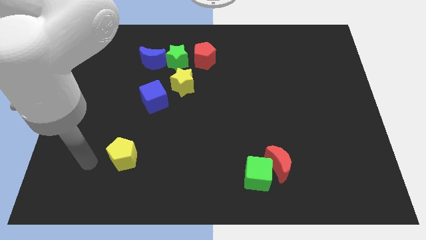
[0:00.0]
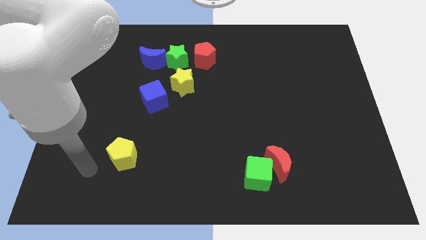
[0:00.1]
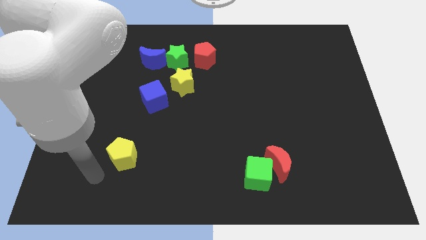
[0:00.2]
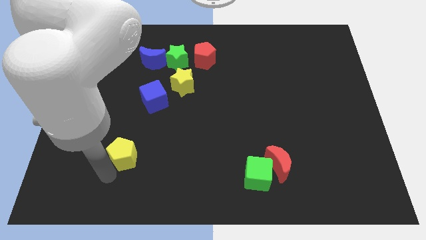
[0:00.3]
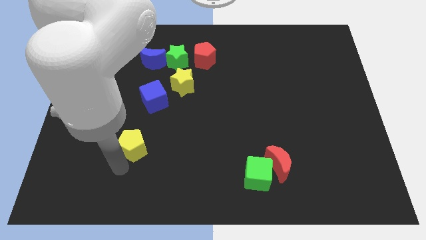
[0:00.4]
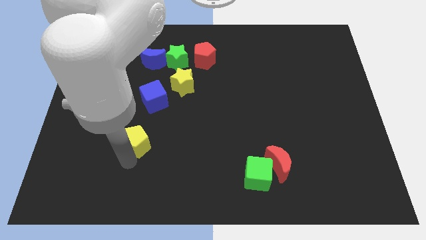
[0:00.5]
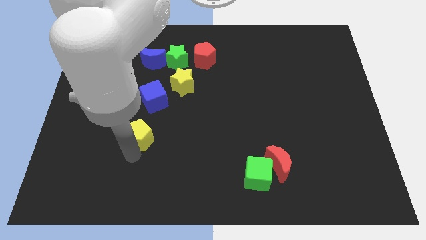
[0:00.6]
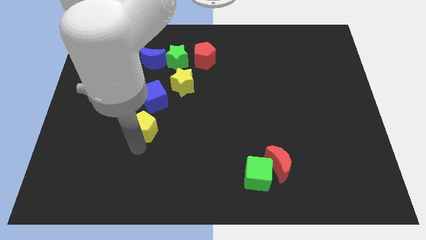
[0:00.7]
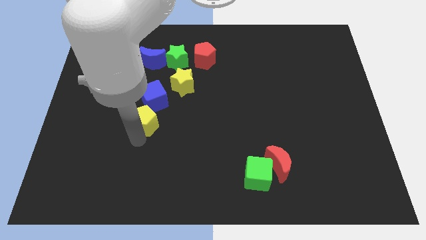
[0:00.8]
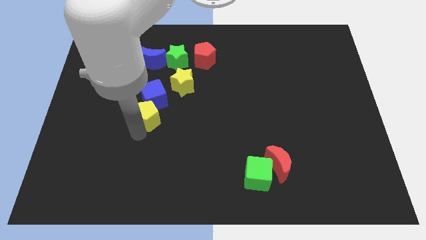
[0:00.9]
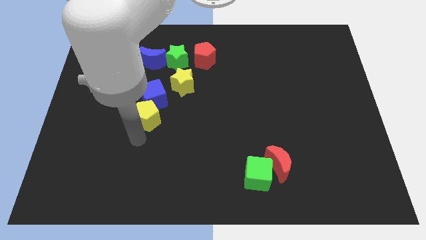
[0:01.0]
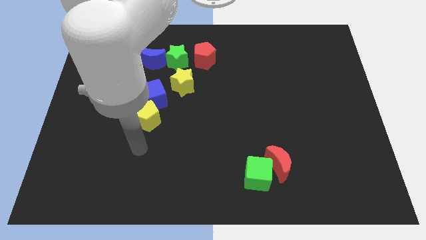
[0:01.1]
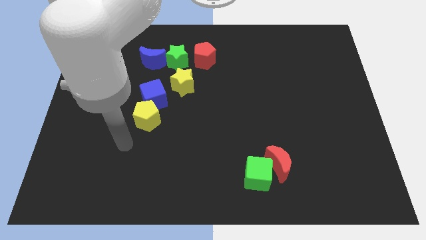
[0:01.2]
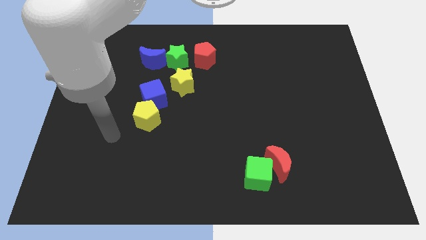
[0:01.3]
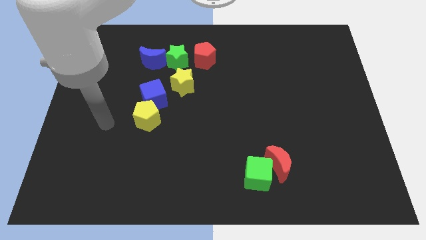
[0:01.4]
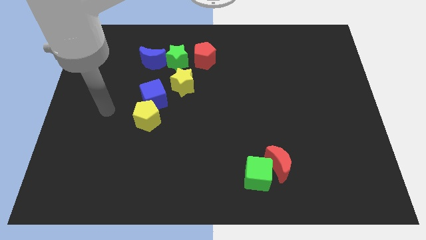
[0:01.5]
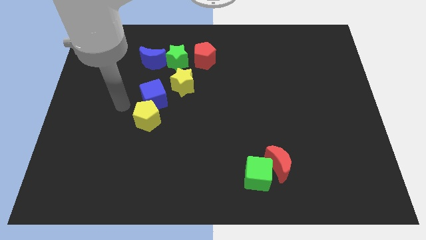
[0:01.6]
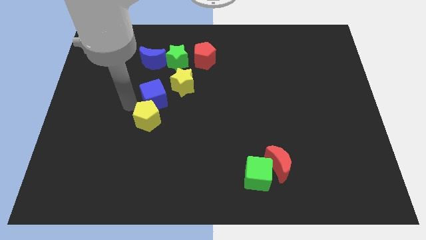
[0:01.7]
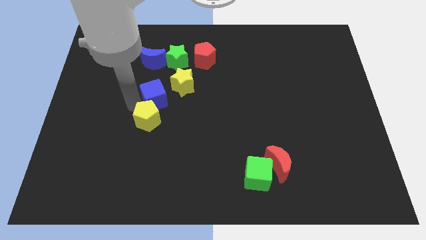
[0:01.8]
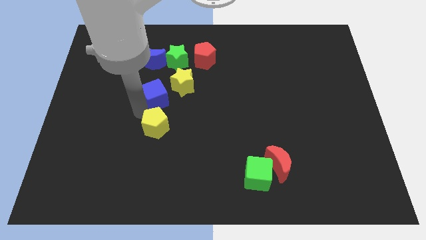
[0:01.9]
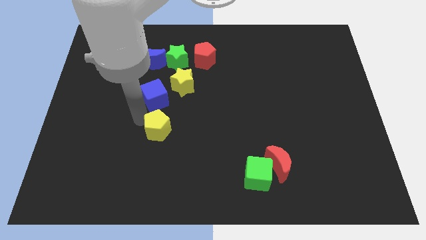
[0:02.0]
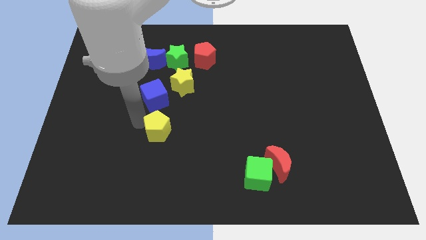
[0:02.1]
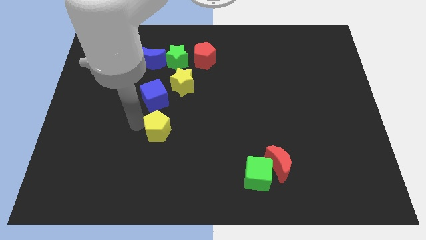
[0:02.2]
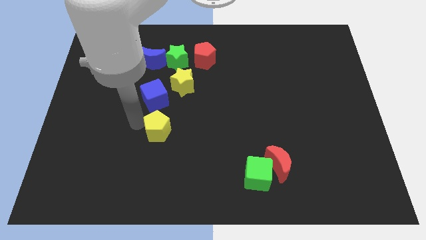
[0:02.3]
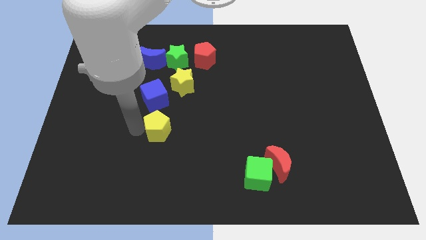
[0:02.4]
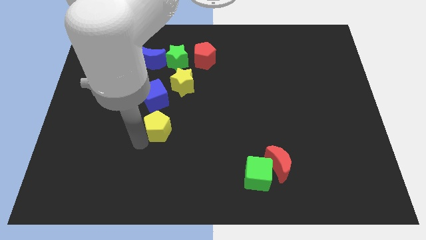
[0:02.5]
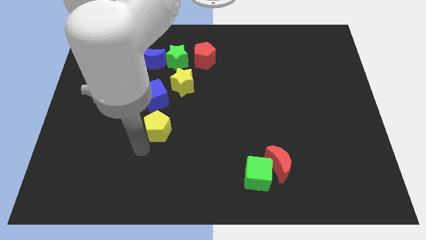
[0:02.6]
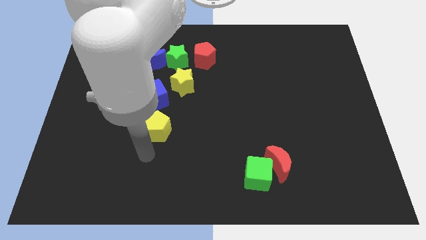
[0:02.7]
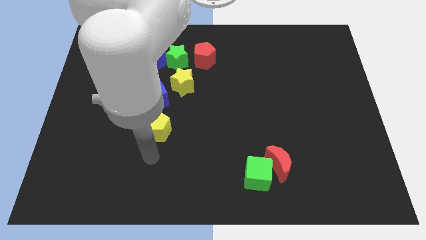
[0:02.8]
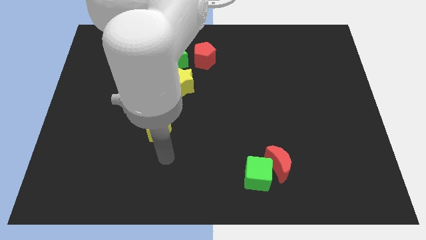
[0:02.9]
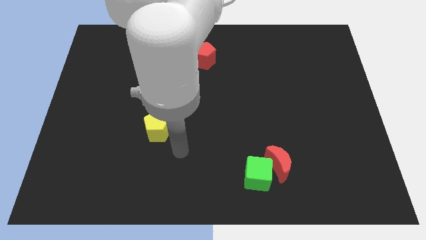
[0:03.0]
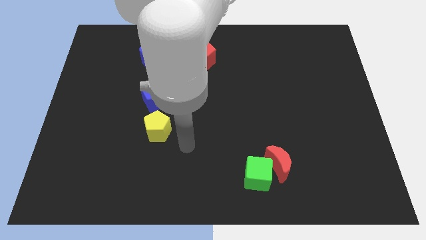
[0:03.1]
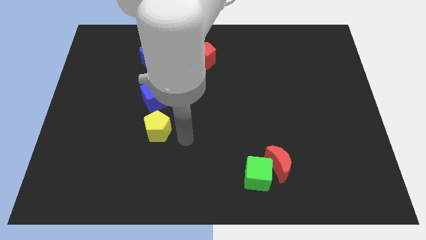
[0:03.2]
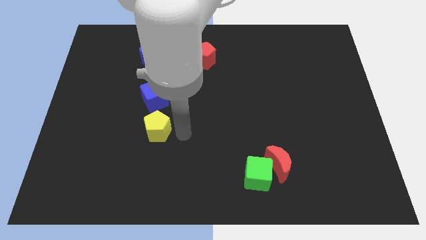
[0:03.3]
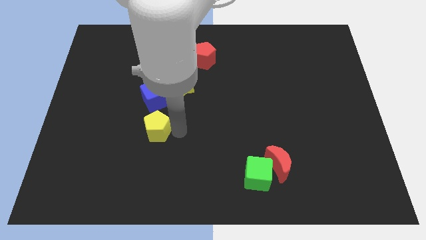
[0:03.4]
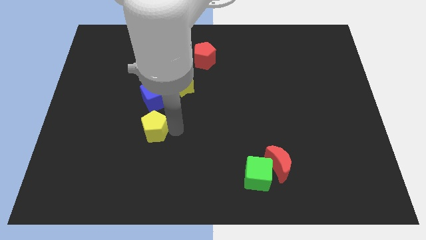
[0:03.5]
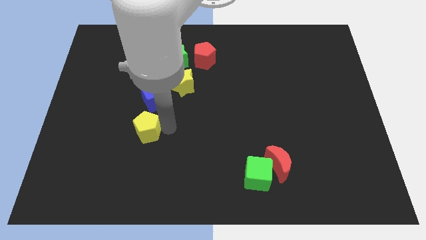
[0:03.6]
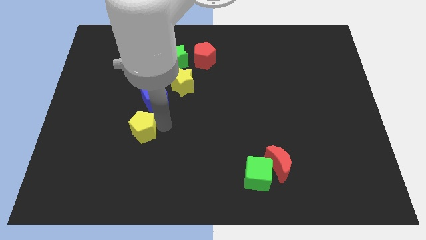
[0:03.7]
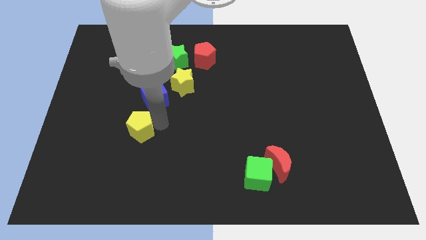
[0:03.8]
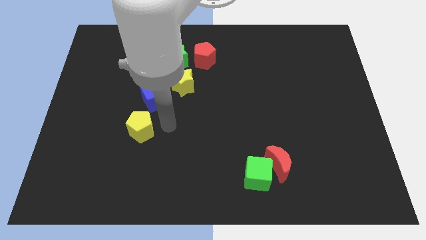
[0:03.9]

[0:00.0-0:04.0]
slide the yellow pentagon to the bottom of the blue cube

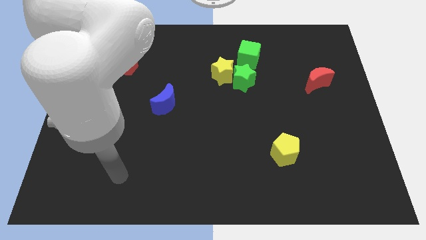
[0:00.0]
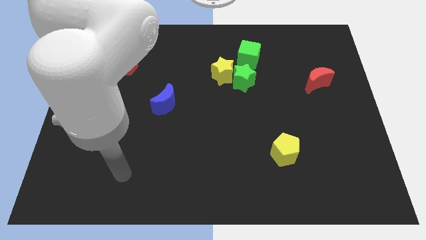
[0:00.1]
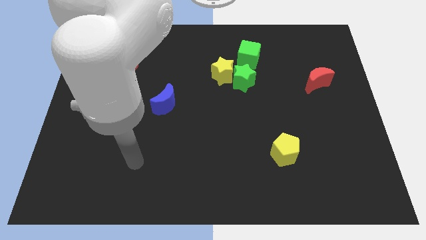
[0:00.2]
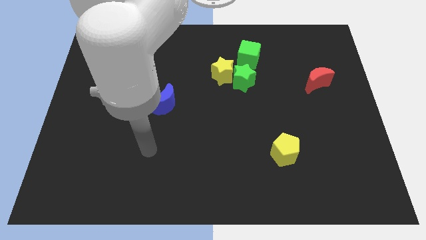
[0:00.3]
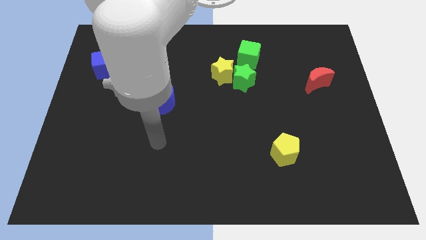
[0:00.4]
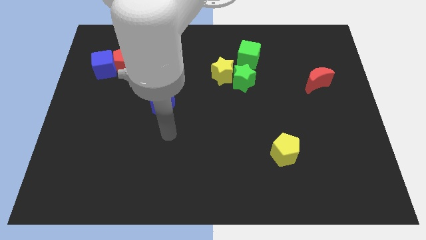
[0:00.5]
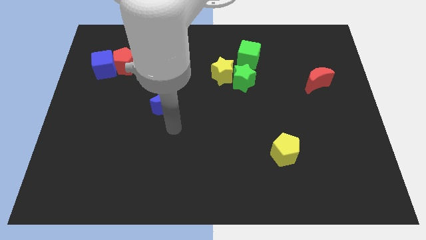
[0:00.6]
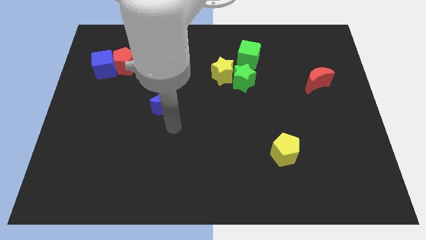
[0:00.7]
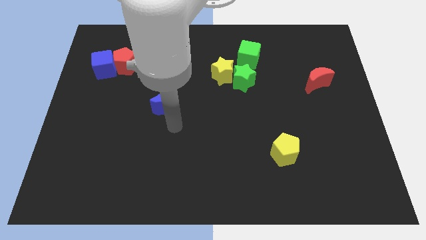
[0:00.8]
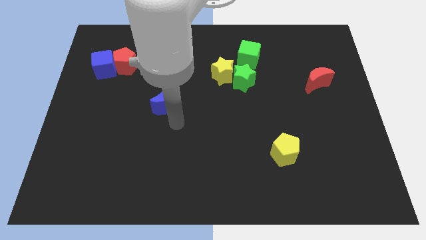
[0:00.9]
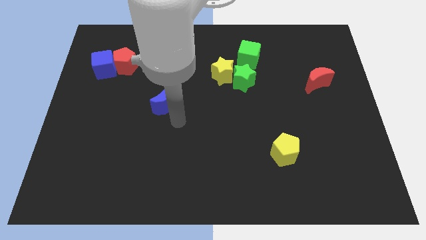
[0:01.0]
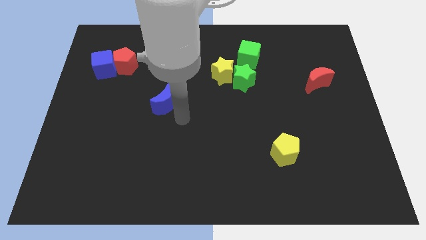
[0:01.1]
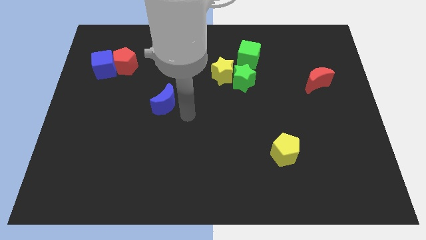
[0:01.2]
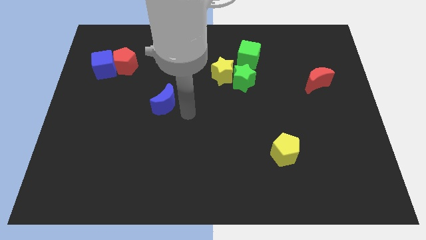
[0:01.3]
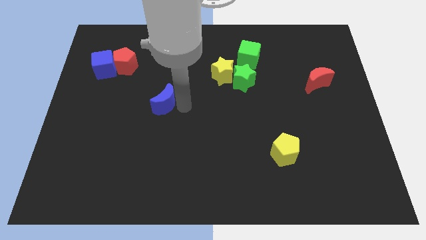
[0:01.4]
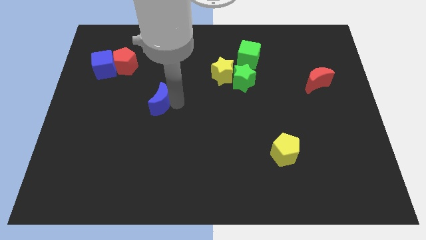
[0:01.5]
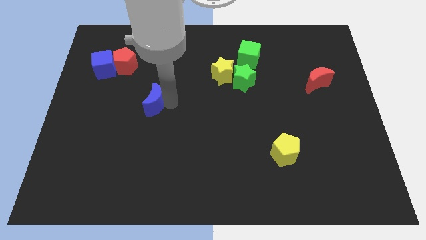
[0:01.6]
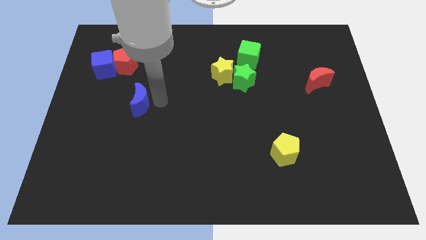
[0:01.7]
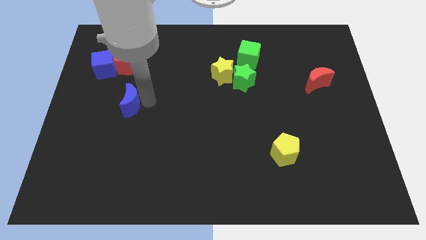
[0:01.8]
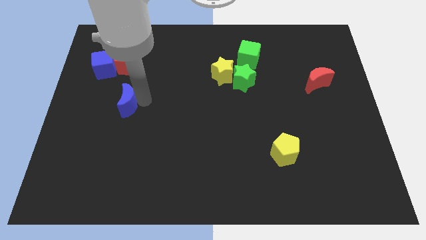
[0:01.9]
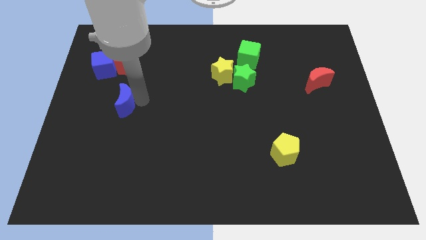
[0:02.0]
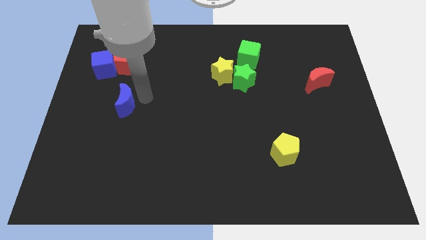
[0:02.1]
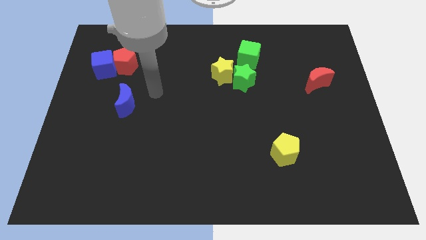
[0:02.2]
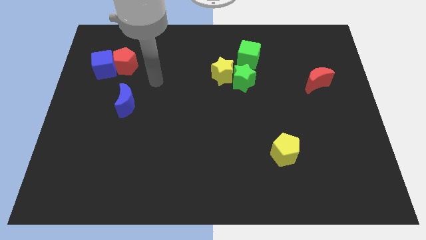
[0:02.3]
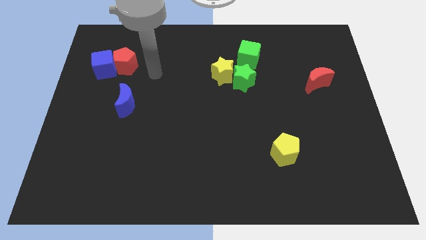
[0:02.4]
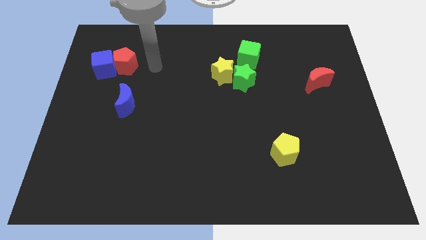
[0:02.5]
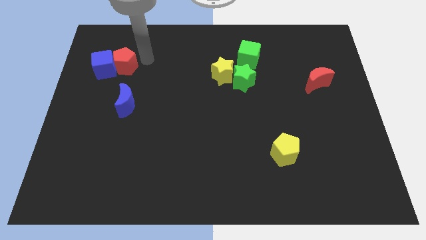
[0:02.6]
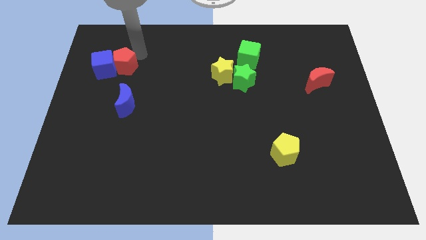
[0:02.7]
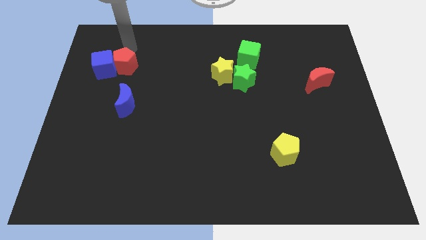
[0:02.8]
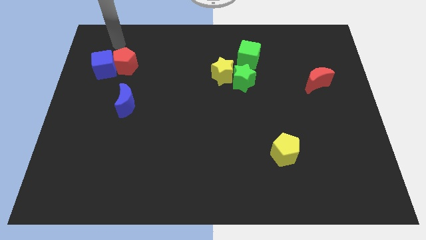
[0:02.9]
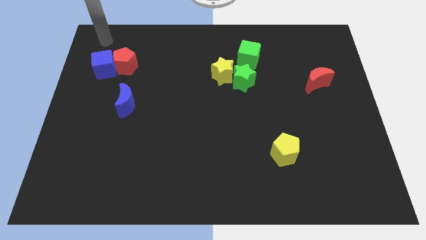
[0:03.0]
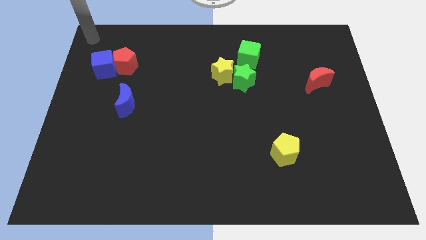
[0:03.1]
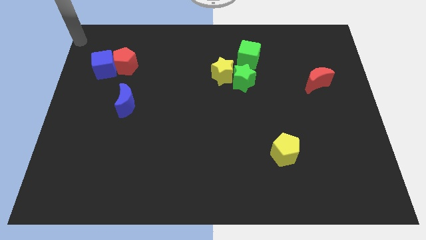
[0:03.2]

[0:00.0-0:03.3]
push the blue crescent towards the left side of the board and move away

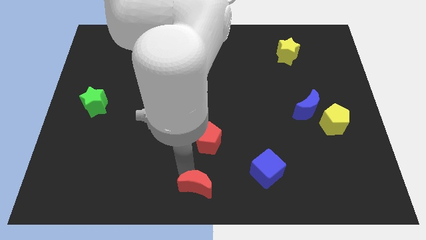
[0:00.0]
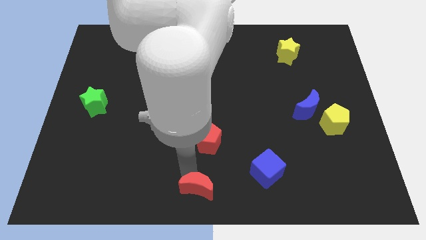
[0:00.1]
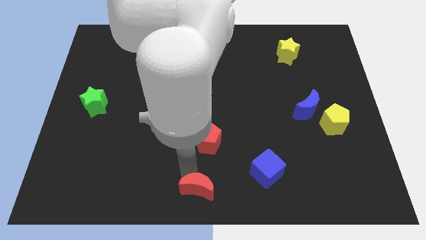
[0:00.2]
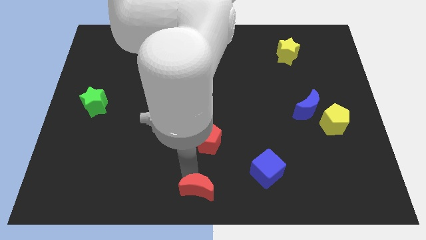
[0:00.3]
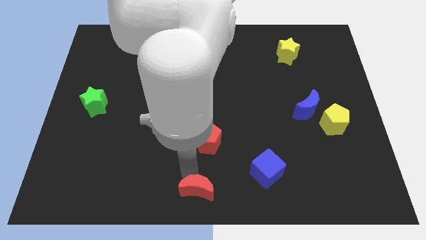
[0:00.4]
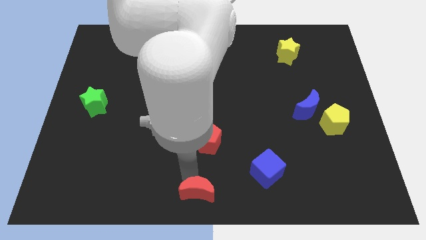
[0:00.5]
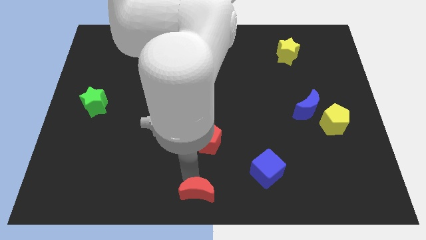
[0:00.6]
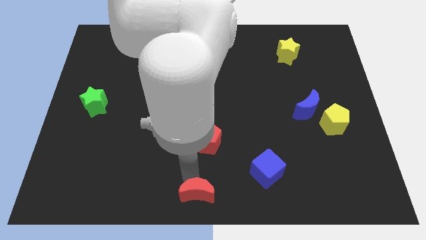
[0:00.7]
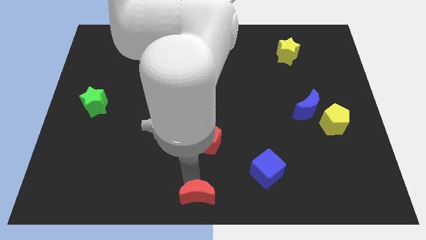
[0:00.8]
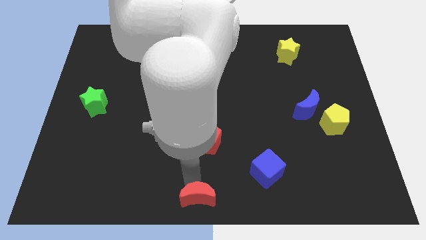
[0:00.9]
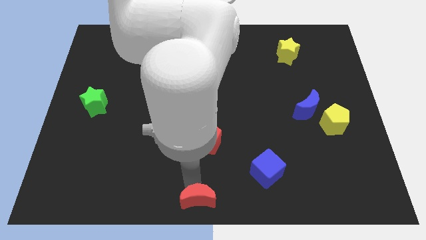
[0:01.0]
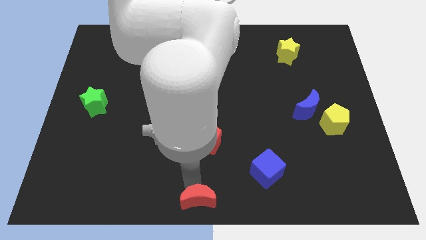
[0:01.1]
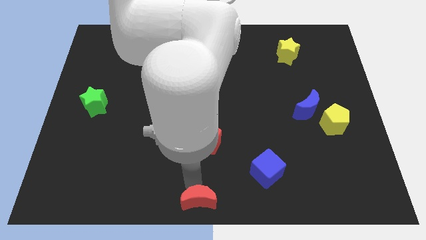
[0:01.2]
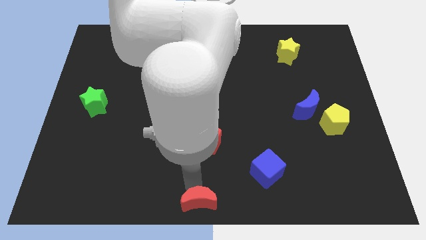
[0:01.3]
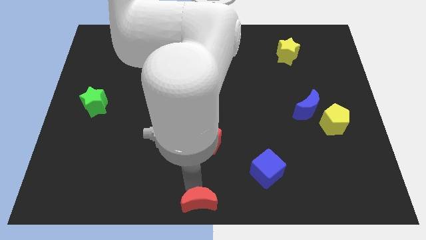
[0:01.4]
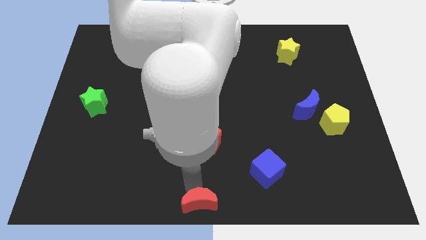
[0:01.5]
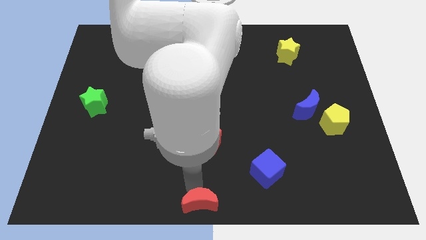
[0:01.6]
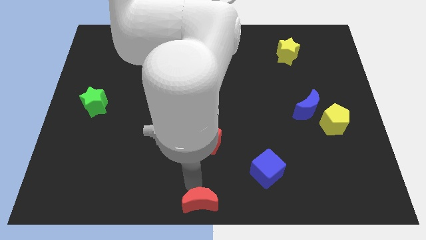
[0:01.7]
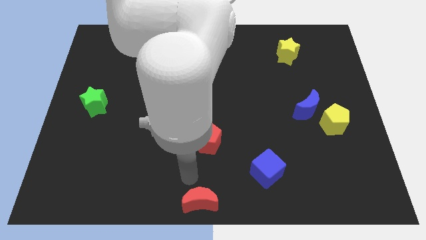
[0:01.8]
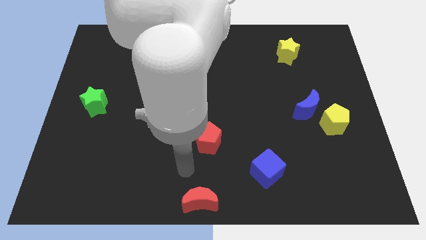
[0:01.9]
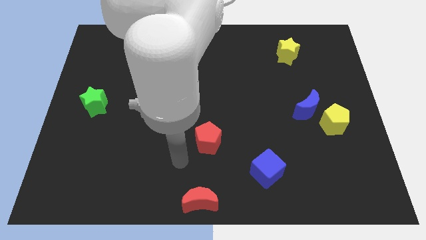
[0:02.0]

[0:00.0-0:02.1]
place the red crescent at bottom center of the board
